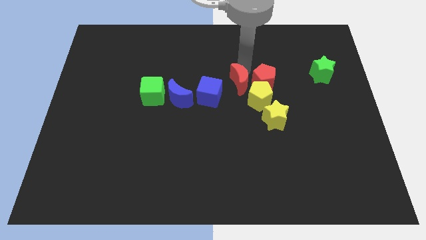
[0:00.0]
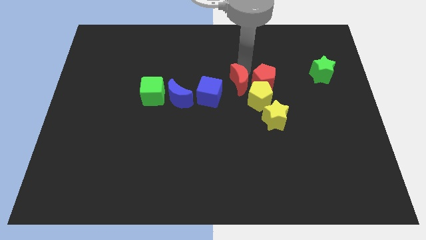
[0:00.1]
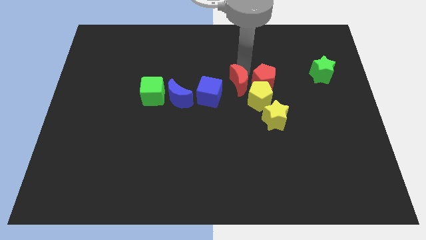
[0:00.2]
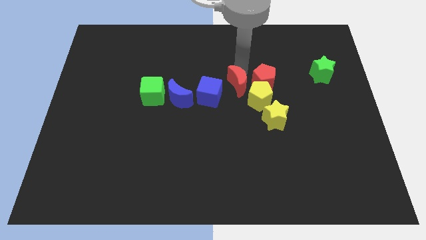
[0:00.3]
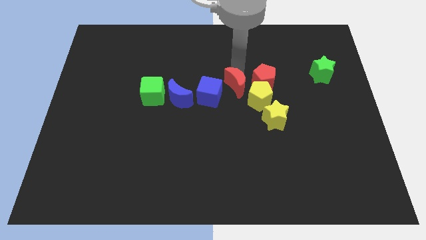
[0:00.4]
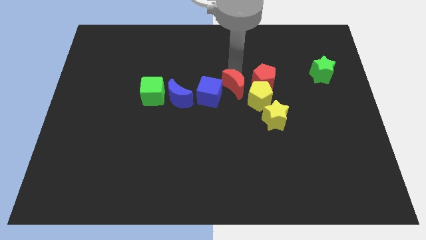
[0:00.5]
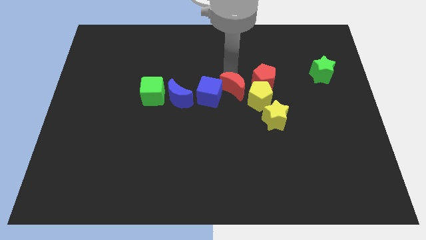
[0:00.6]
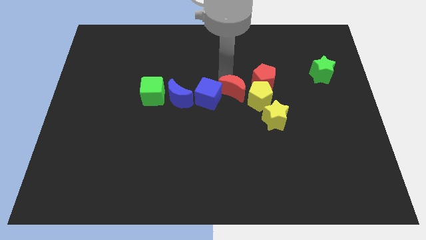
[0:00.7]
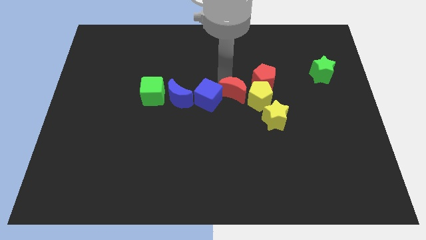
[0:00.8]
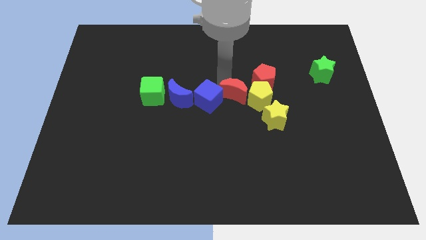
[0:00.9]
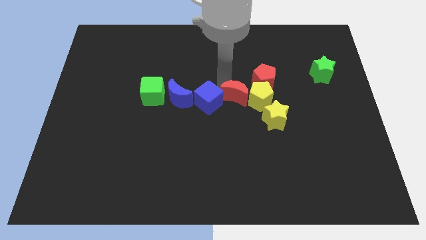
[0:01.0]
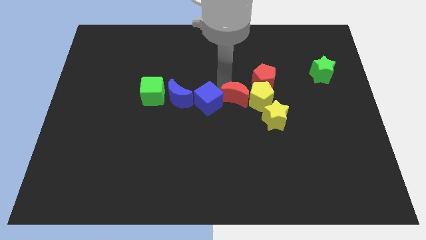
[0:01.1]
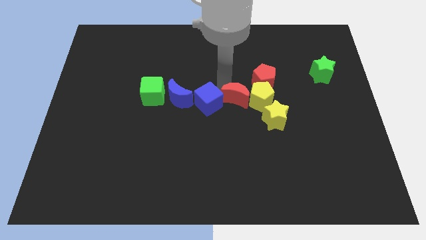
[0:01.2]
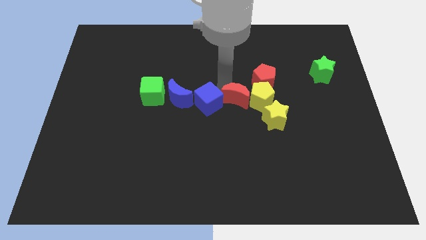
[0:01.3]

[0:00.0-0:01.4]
push the red moon downwards

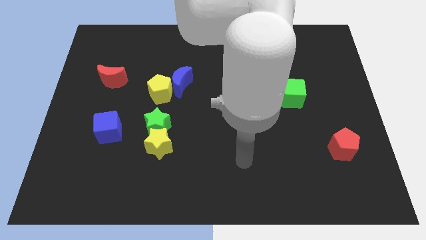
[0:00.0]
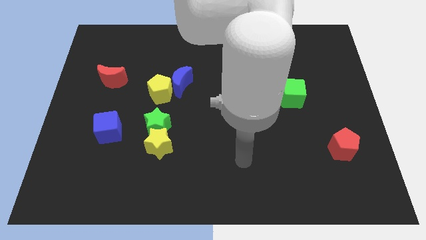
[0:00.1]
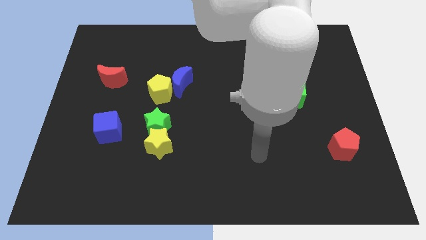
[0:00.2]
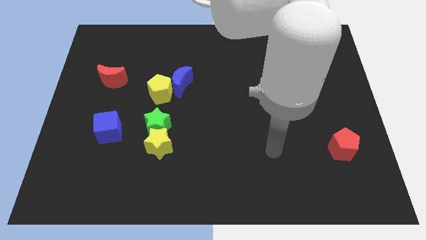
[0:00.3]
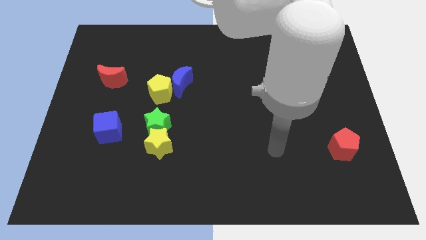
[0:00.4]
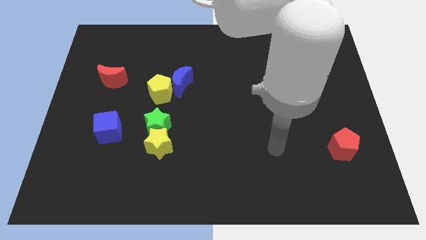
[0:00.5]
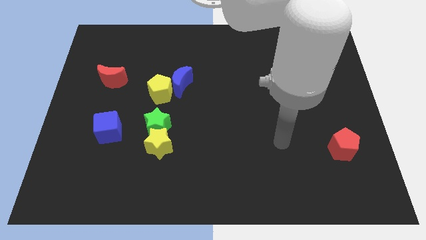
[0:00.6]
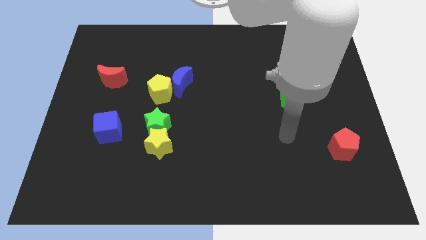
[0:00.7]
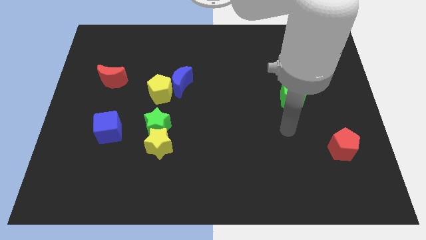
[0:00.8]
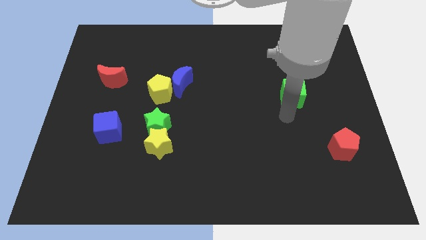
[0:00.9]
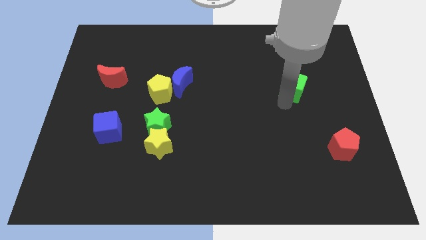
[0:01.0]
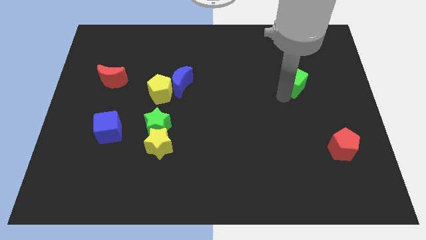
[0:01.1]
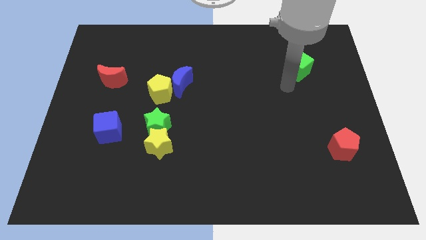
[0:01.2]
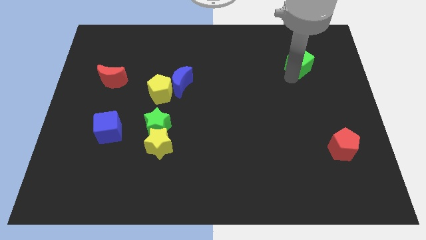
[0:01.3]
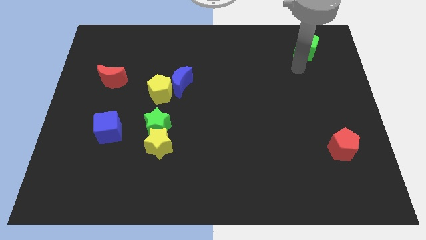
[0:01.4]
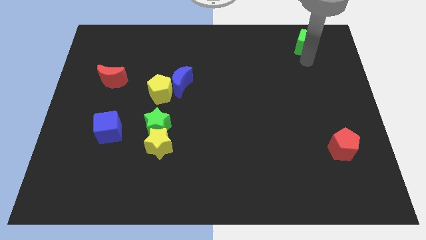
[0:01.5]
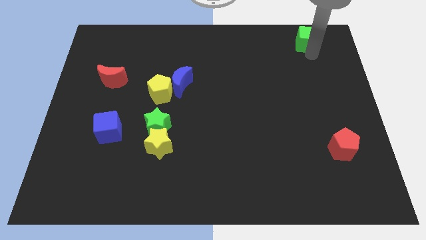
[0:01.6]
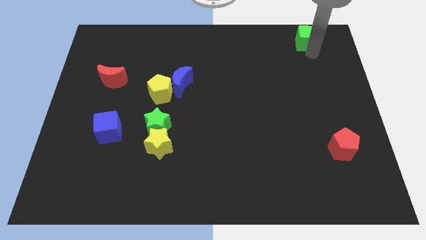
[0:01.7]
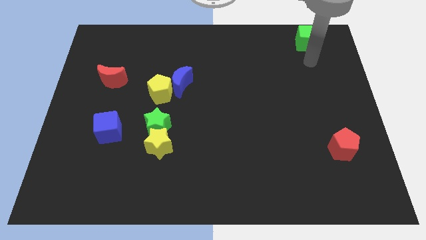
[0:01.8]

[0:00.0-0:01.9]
move the green cube to the top

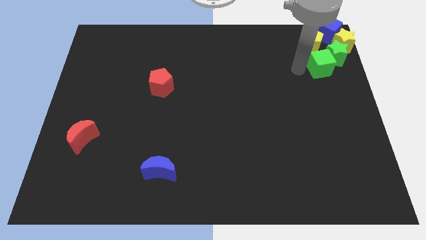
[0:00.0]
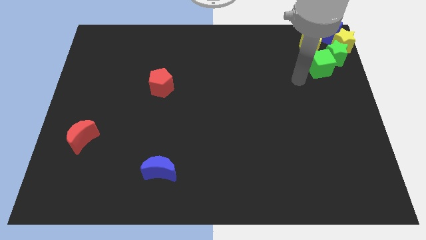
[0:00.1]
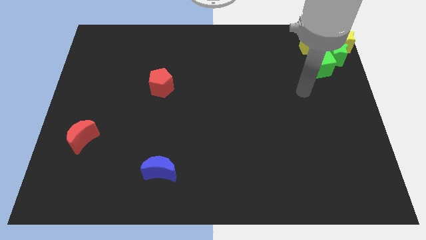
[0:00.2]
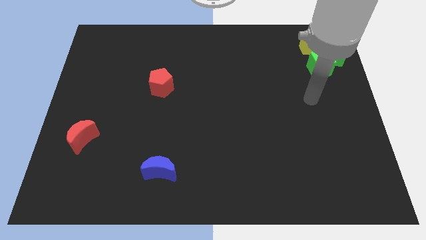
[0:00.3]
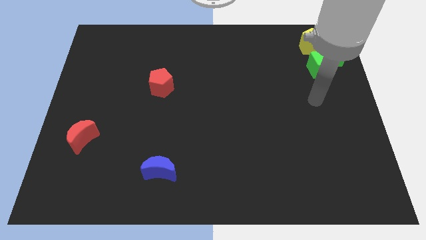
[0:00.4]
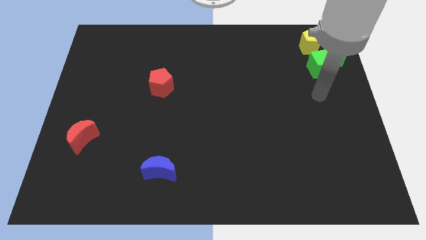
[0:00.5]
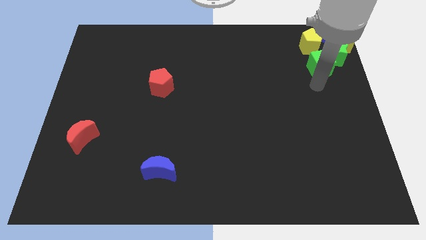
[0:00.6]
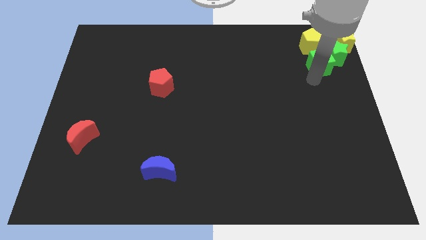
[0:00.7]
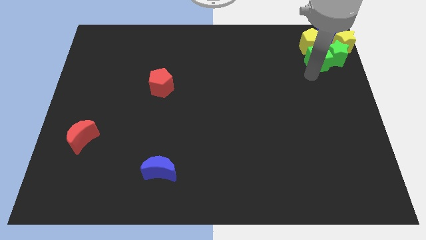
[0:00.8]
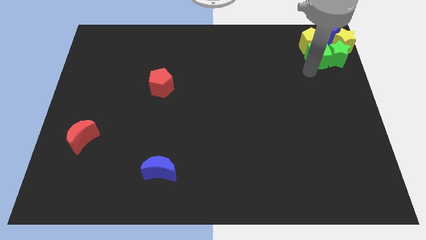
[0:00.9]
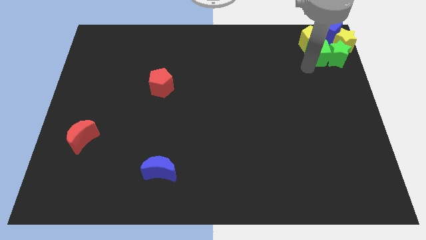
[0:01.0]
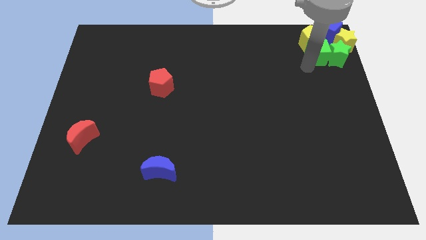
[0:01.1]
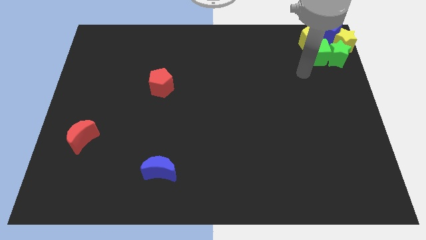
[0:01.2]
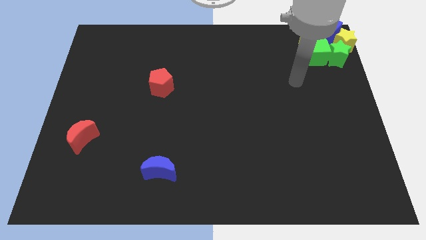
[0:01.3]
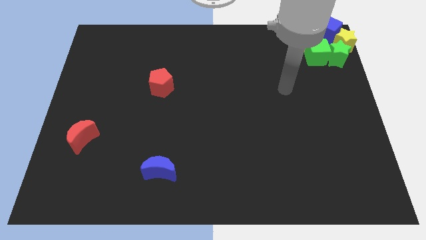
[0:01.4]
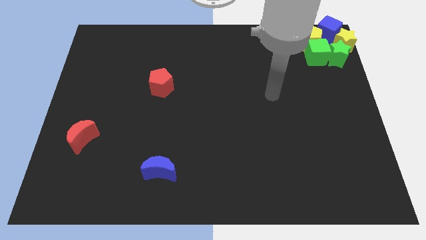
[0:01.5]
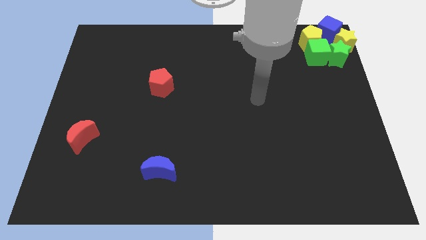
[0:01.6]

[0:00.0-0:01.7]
move the green cube slightly upwards

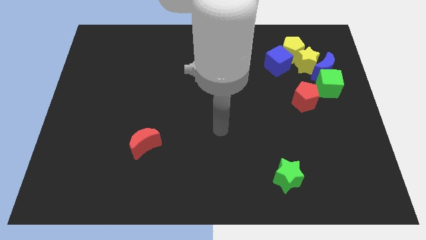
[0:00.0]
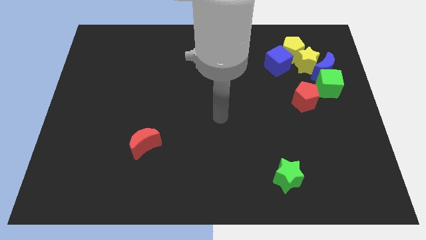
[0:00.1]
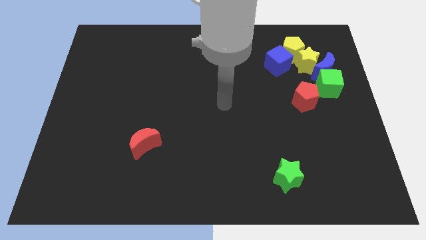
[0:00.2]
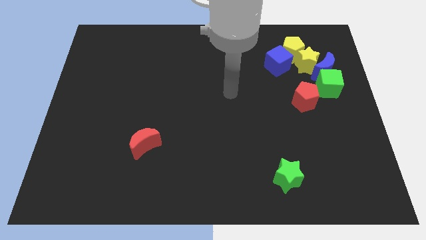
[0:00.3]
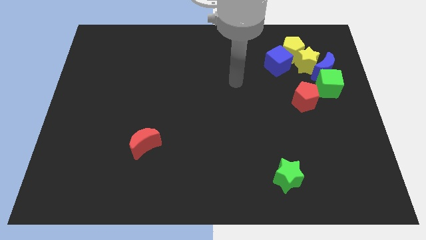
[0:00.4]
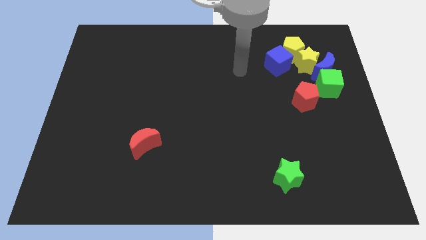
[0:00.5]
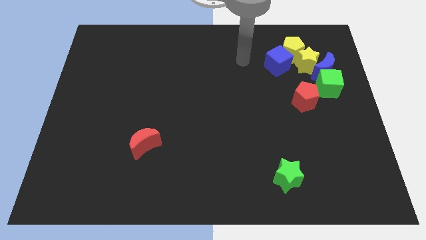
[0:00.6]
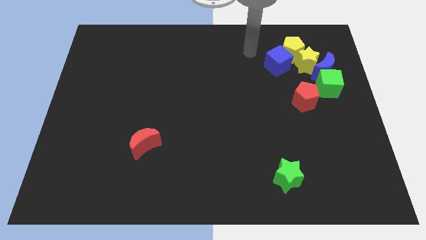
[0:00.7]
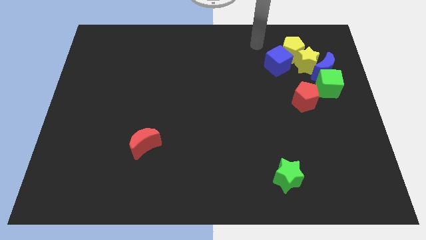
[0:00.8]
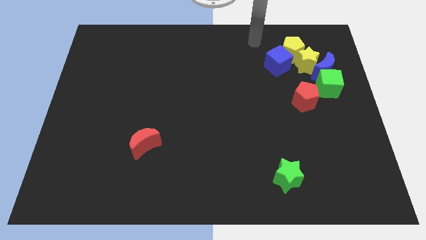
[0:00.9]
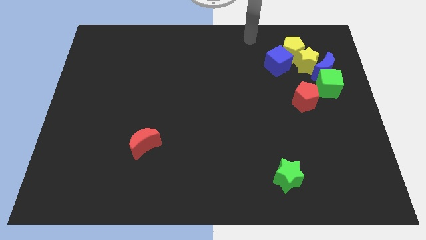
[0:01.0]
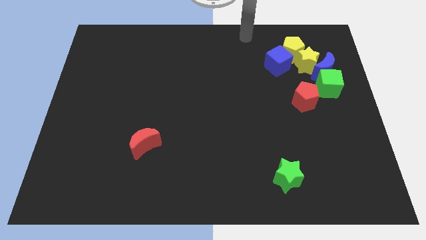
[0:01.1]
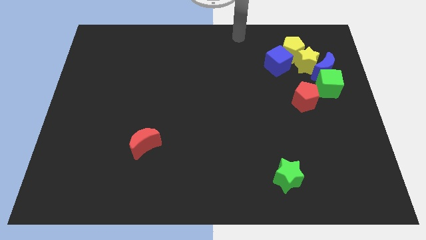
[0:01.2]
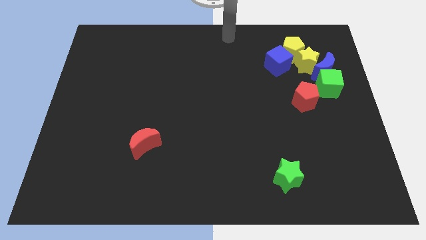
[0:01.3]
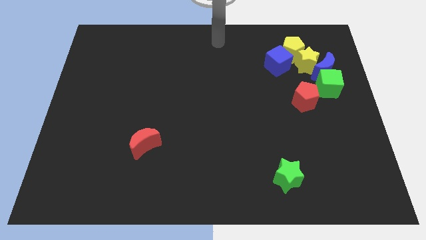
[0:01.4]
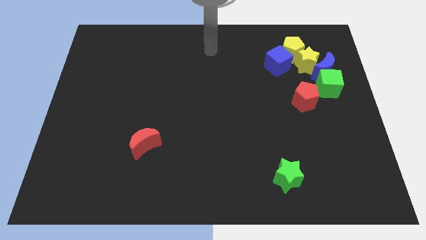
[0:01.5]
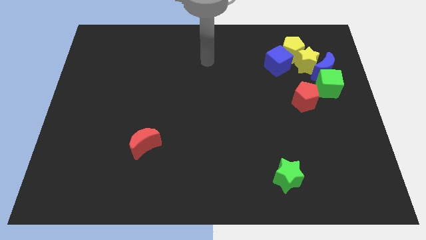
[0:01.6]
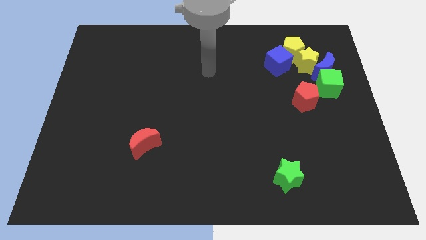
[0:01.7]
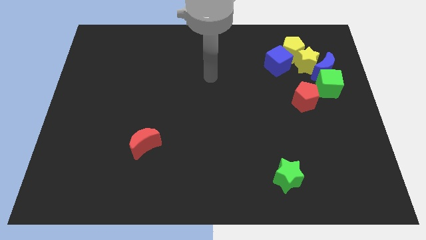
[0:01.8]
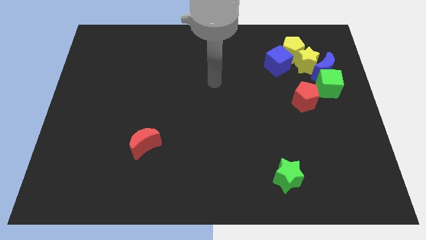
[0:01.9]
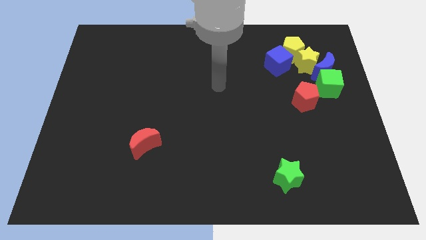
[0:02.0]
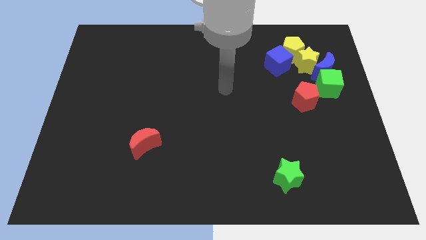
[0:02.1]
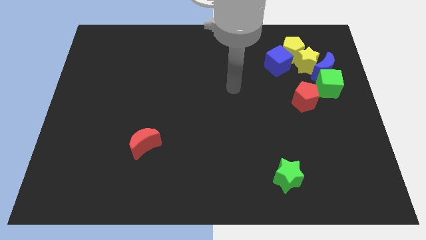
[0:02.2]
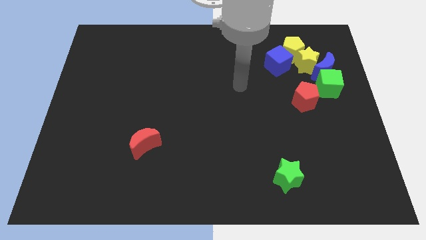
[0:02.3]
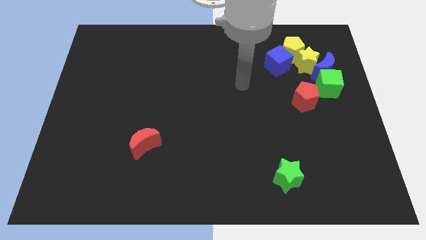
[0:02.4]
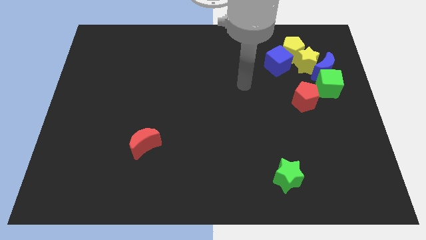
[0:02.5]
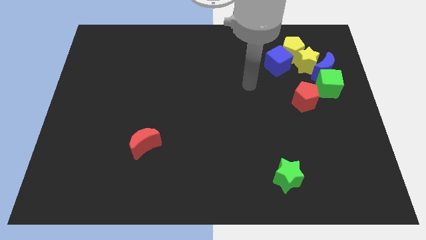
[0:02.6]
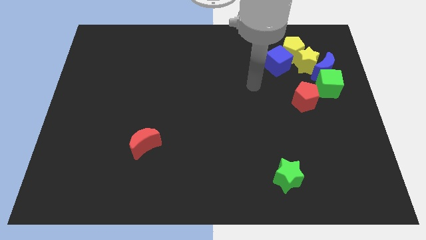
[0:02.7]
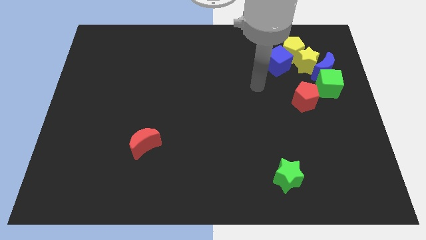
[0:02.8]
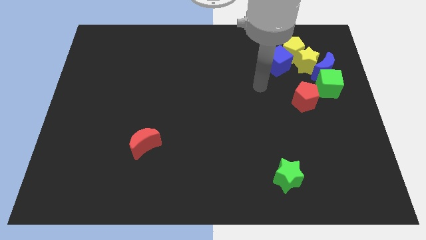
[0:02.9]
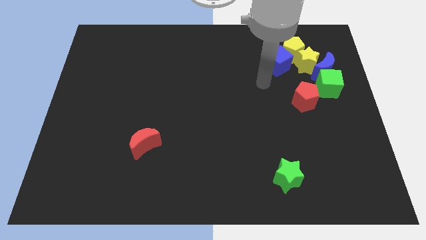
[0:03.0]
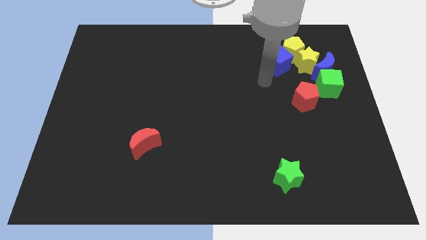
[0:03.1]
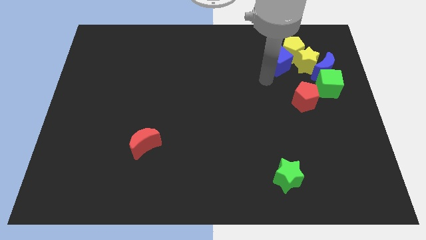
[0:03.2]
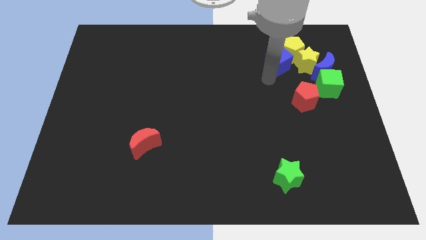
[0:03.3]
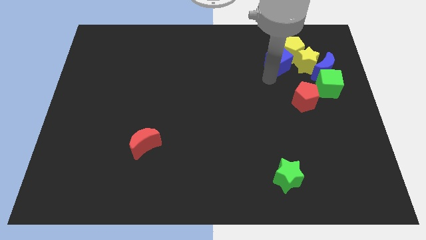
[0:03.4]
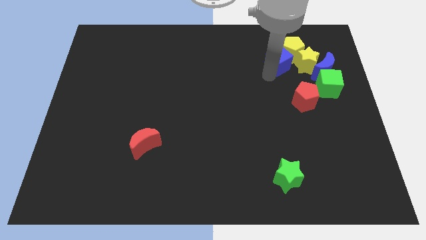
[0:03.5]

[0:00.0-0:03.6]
move your arm close to the blue cube

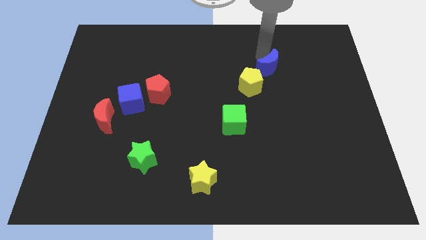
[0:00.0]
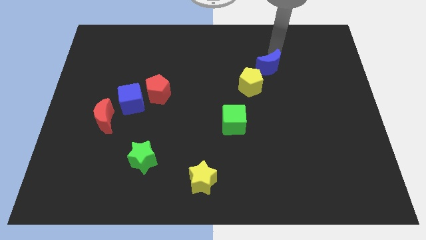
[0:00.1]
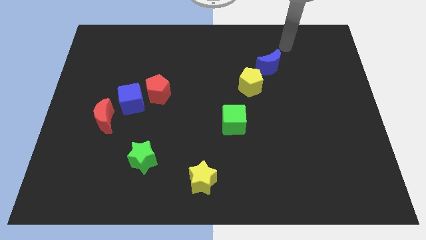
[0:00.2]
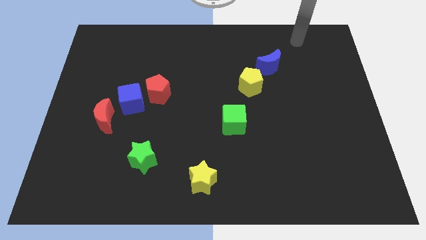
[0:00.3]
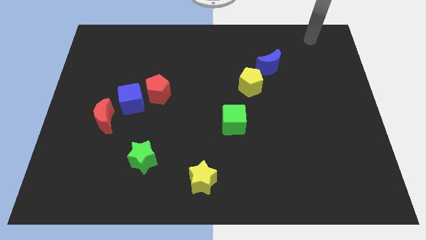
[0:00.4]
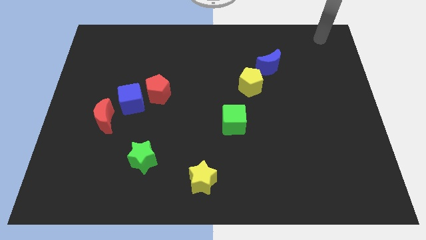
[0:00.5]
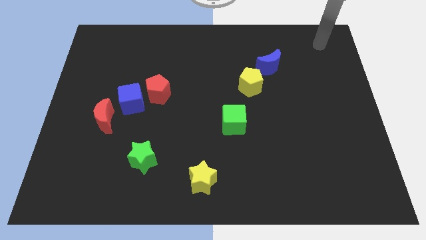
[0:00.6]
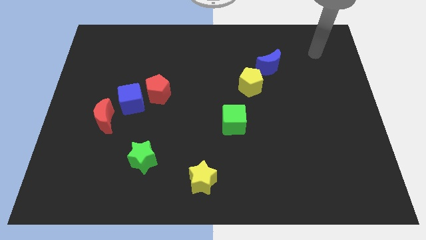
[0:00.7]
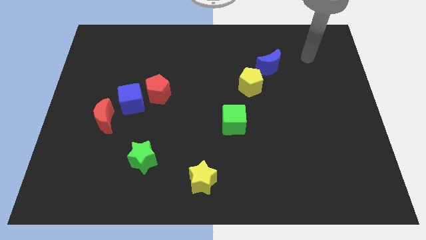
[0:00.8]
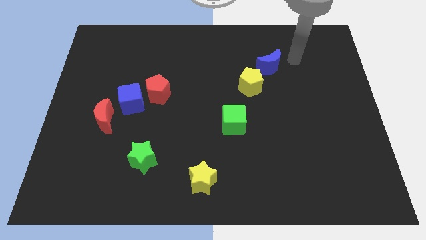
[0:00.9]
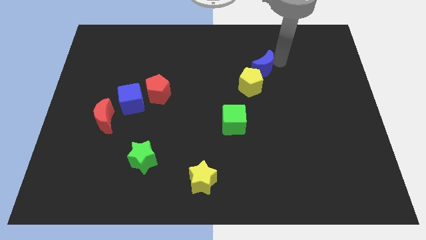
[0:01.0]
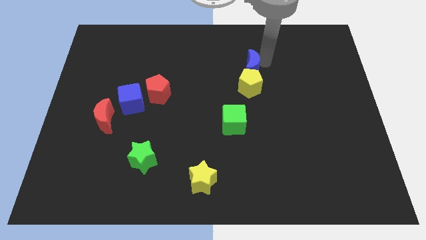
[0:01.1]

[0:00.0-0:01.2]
push the blue crescent above the yellow pentagon
